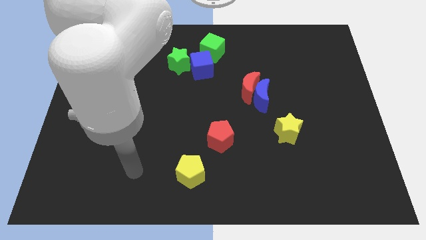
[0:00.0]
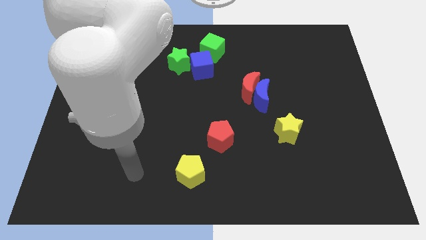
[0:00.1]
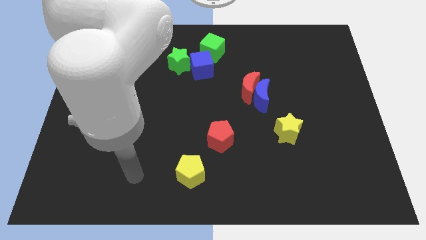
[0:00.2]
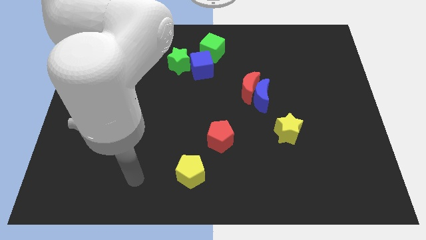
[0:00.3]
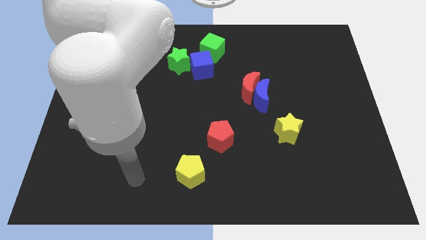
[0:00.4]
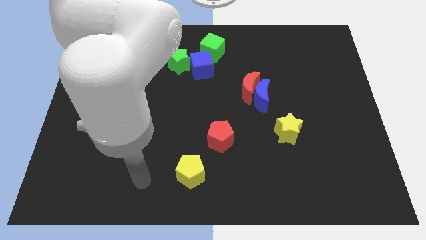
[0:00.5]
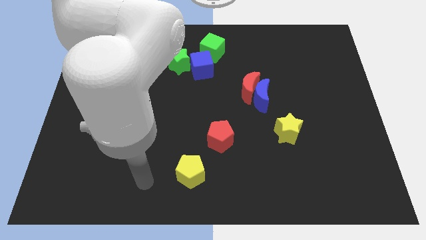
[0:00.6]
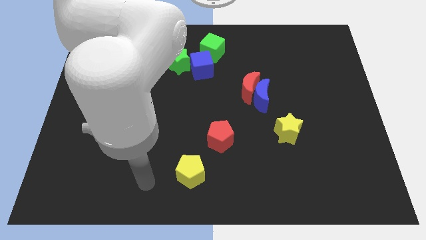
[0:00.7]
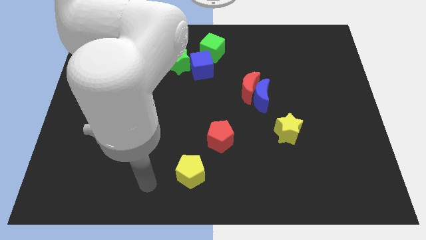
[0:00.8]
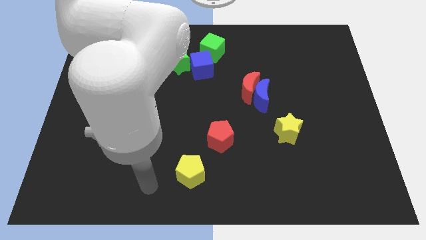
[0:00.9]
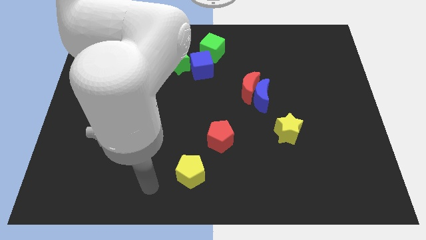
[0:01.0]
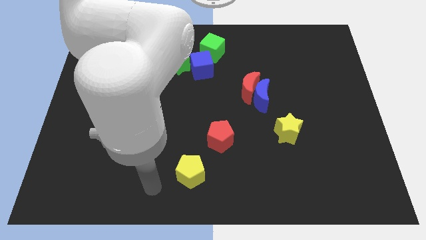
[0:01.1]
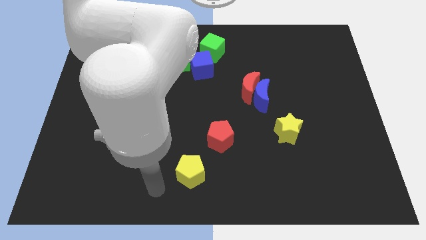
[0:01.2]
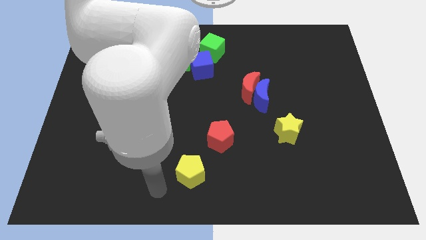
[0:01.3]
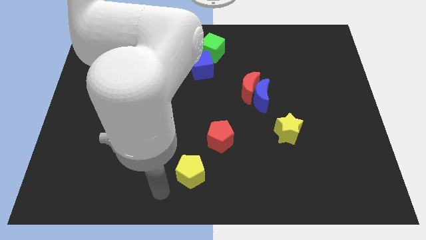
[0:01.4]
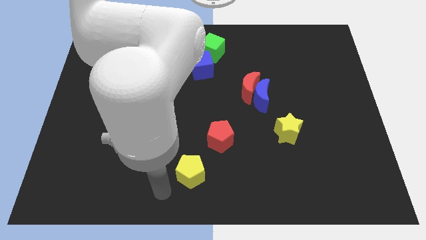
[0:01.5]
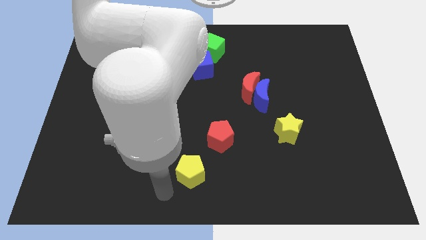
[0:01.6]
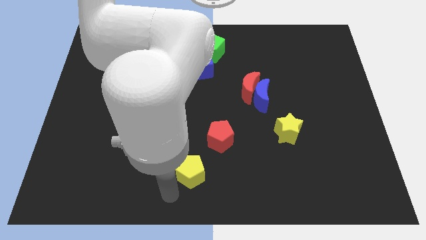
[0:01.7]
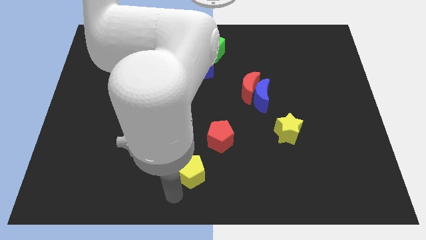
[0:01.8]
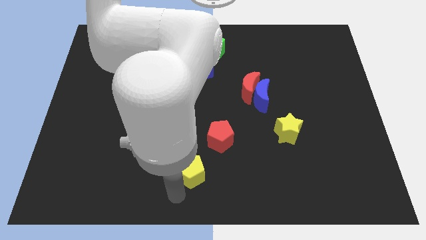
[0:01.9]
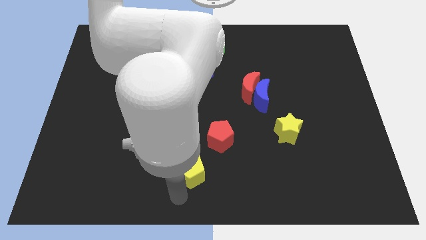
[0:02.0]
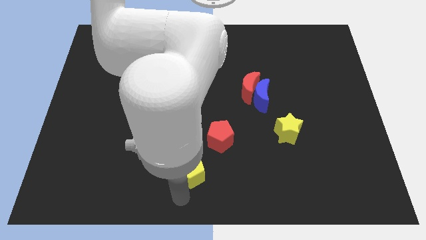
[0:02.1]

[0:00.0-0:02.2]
move your arm to the bottom of yellow pentagon

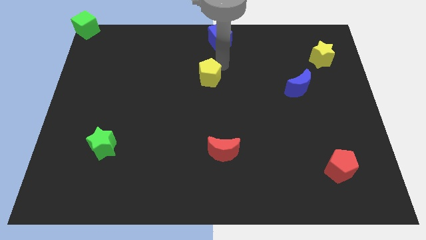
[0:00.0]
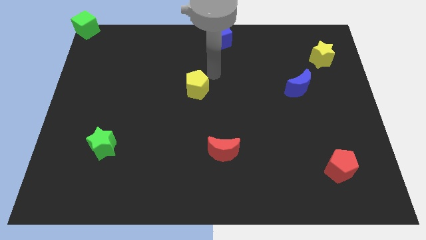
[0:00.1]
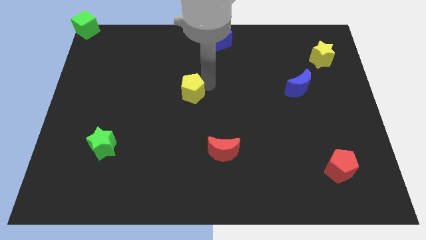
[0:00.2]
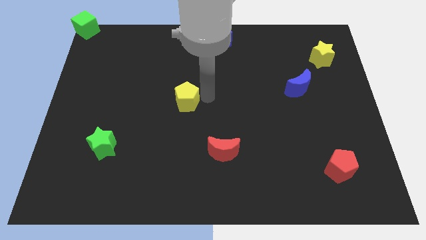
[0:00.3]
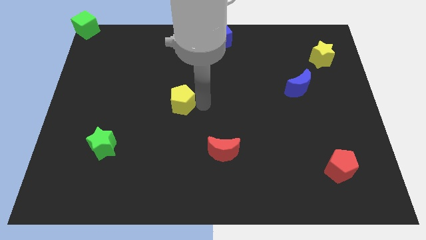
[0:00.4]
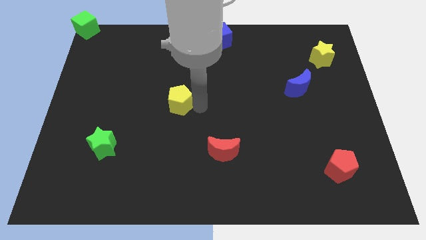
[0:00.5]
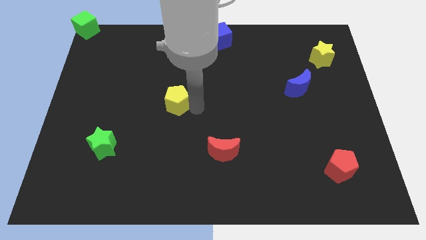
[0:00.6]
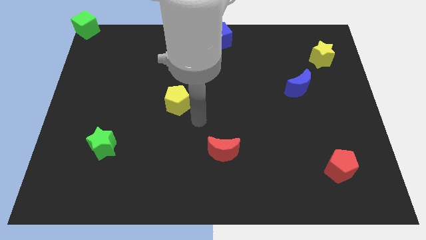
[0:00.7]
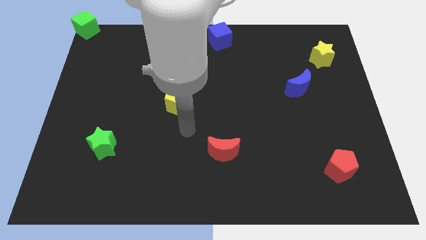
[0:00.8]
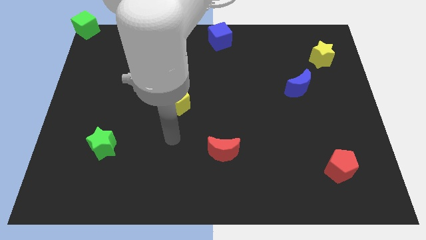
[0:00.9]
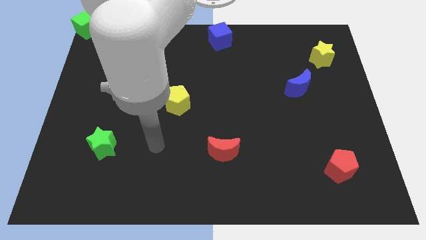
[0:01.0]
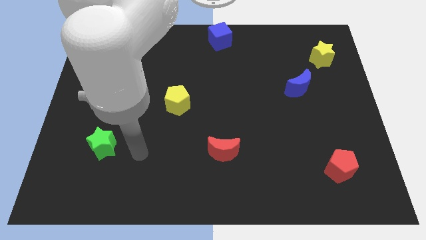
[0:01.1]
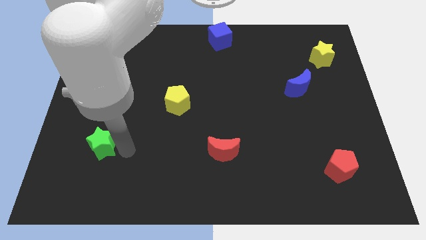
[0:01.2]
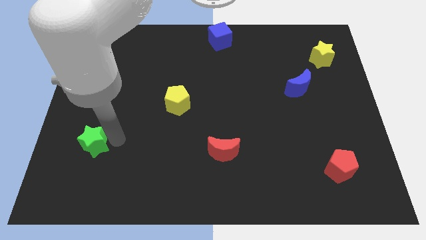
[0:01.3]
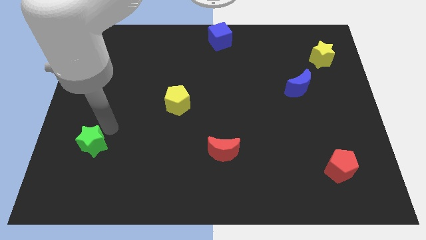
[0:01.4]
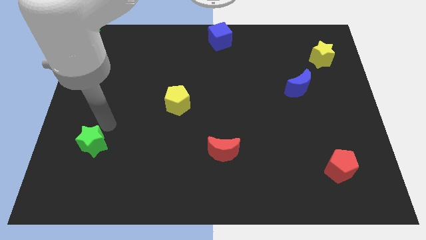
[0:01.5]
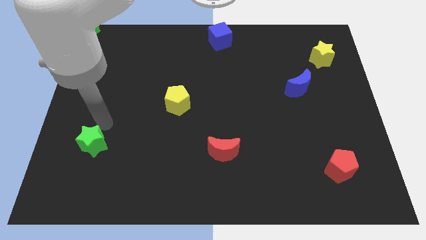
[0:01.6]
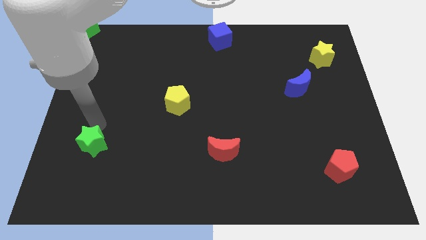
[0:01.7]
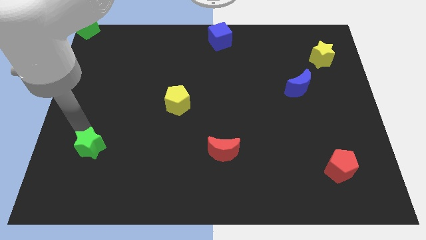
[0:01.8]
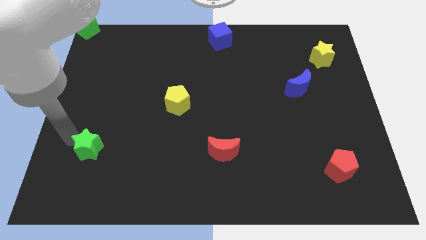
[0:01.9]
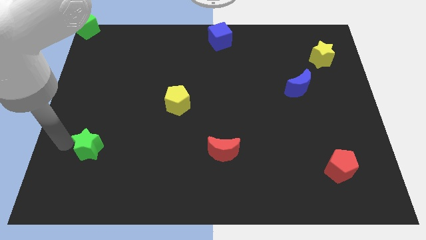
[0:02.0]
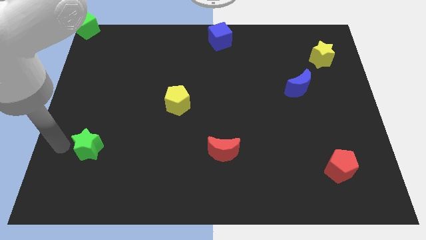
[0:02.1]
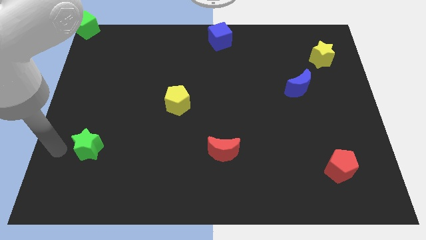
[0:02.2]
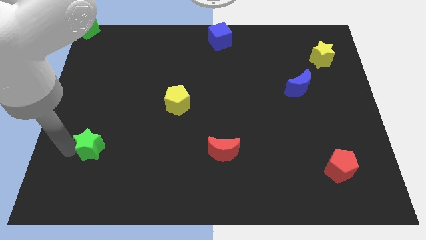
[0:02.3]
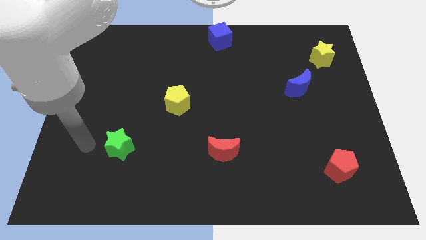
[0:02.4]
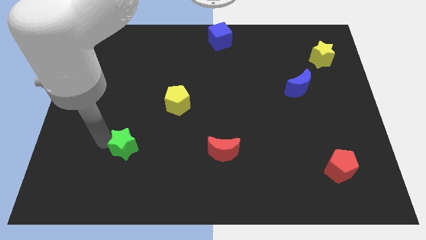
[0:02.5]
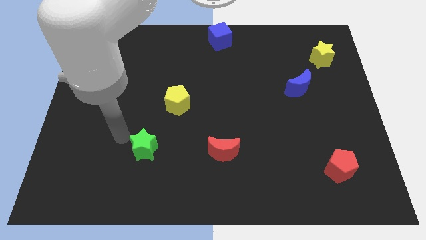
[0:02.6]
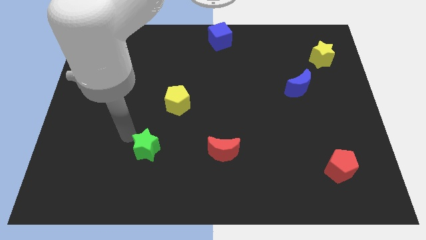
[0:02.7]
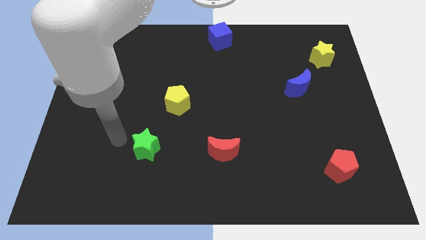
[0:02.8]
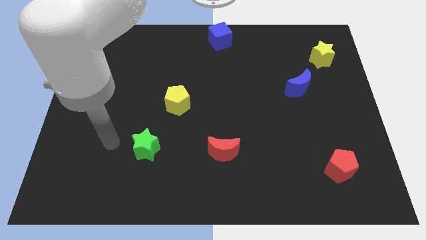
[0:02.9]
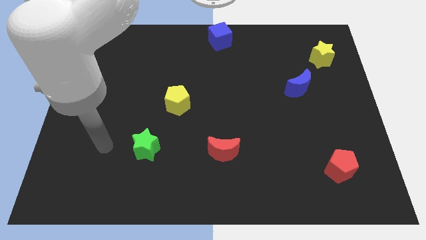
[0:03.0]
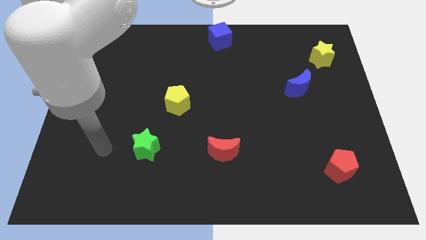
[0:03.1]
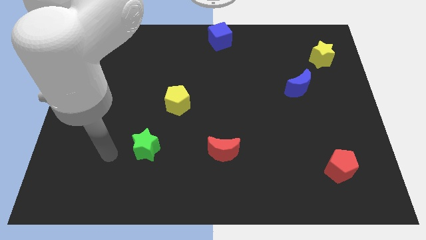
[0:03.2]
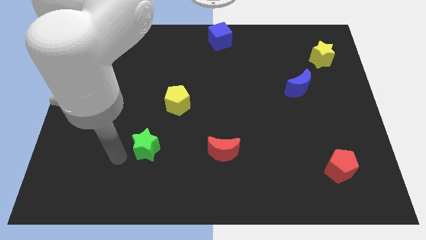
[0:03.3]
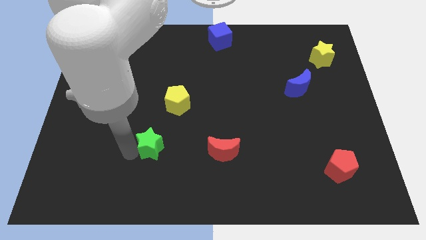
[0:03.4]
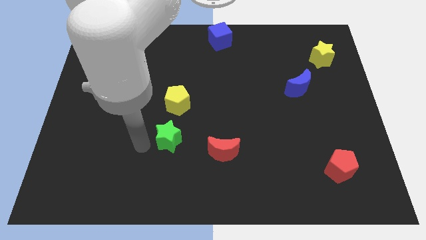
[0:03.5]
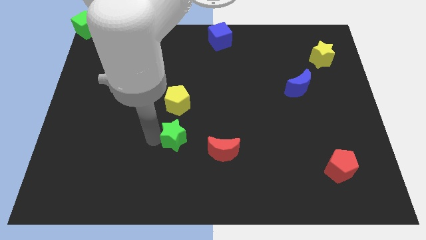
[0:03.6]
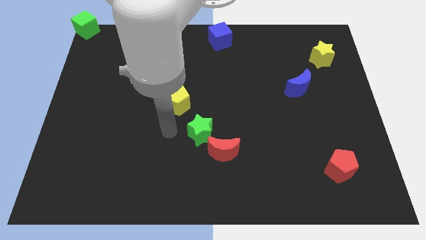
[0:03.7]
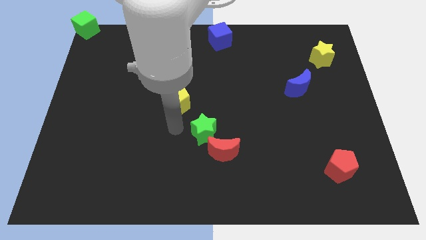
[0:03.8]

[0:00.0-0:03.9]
place the green star between red moon and yellow pentagon

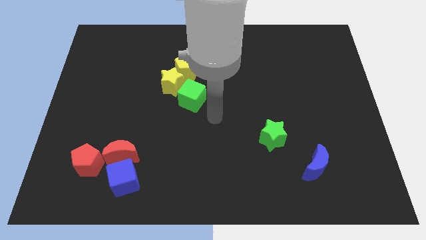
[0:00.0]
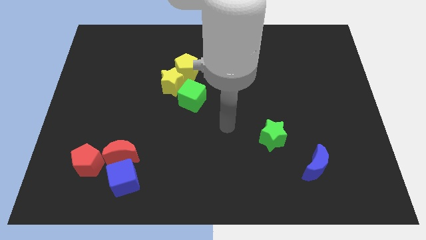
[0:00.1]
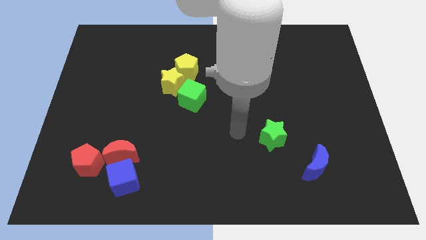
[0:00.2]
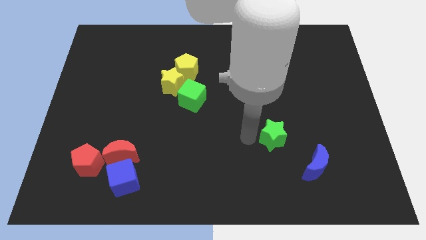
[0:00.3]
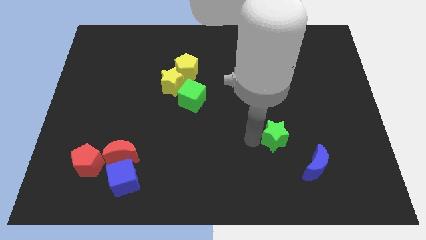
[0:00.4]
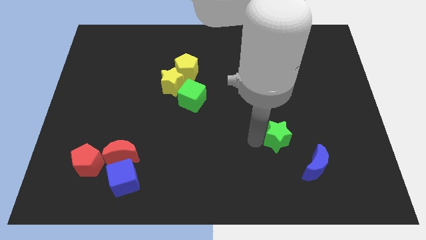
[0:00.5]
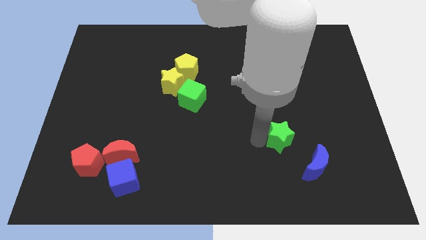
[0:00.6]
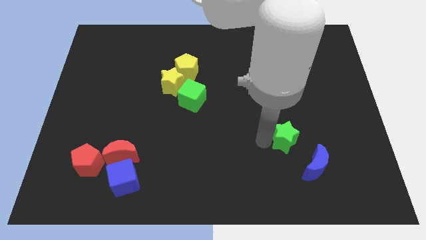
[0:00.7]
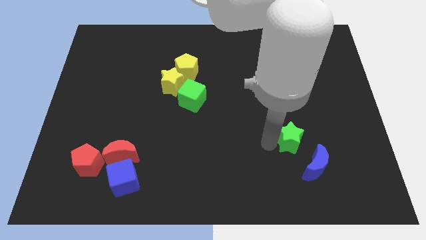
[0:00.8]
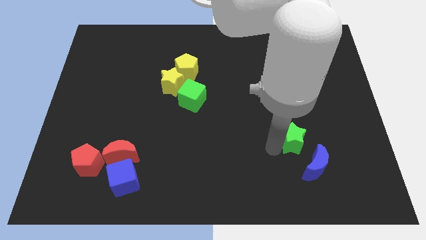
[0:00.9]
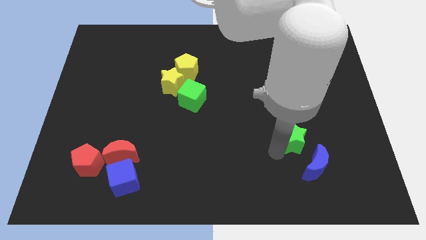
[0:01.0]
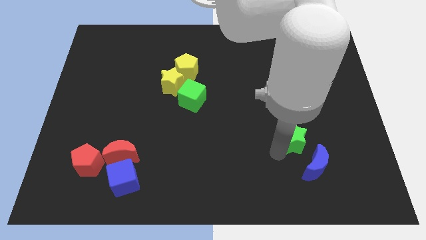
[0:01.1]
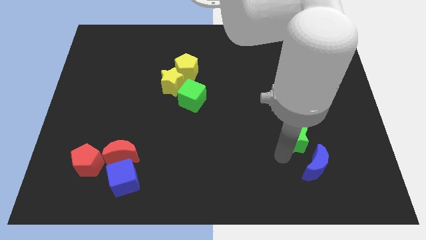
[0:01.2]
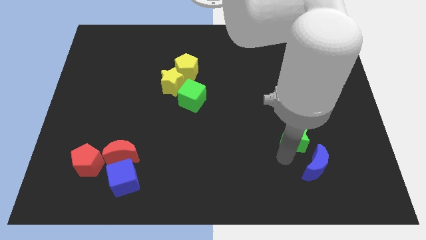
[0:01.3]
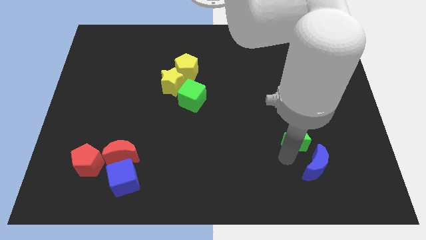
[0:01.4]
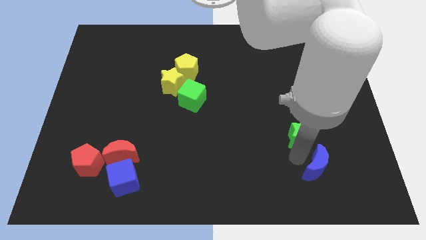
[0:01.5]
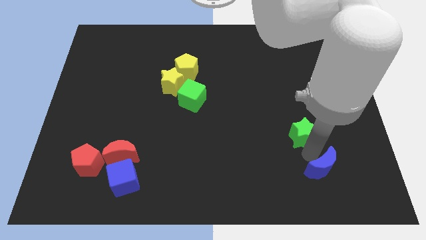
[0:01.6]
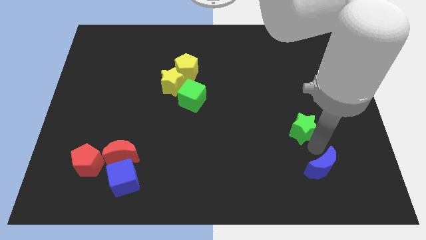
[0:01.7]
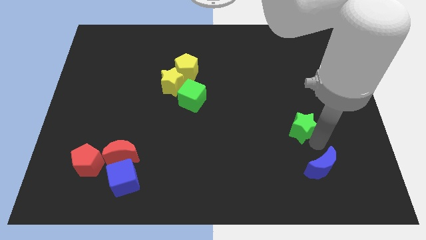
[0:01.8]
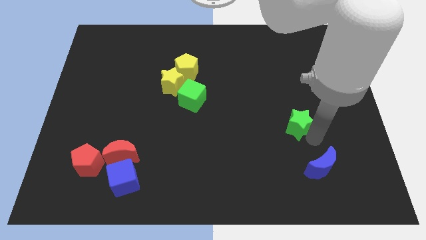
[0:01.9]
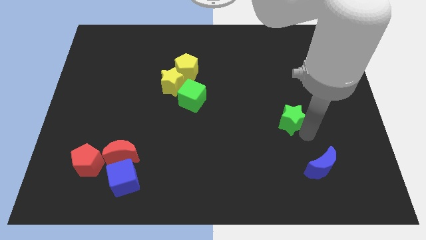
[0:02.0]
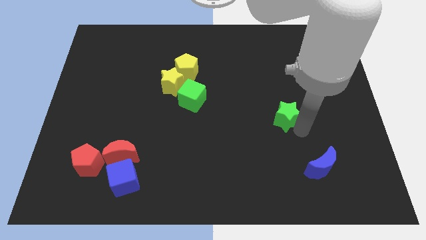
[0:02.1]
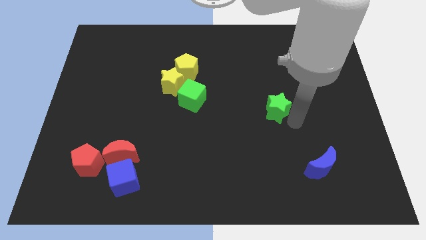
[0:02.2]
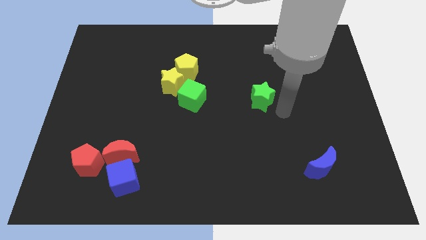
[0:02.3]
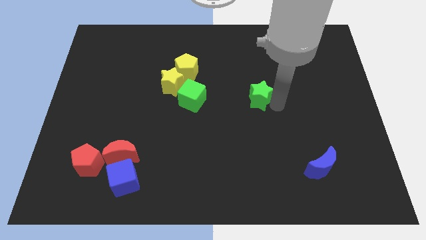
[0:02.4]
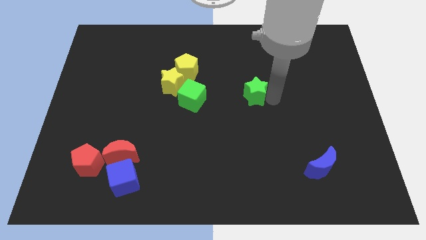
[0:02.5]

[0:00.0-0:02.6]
push the green star to the right of the green cube
